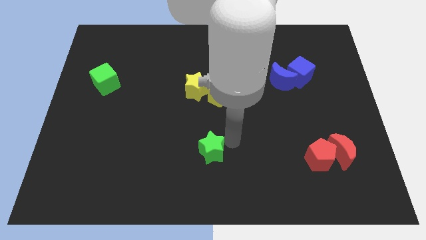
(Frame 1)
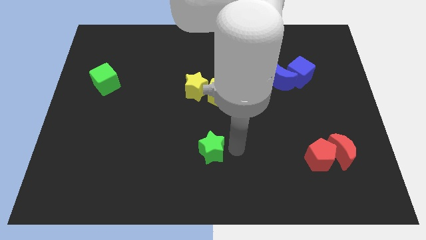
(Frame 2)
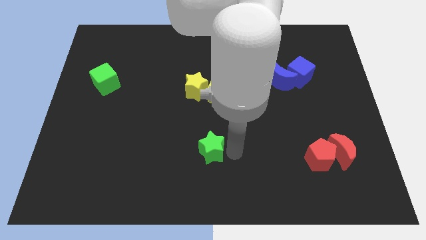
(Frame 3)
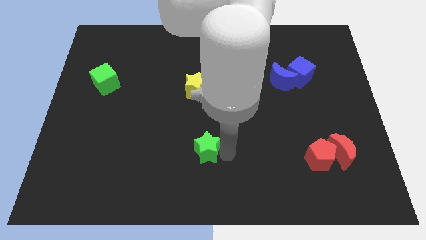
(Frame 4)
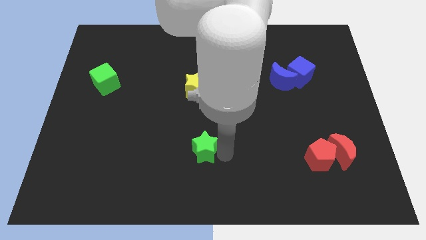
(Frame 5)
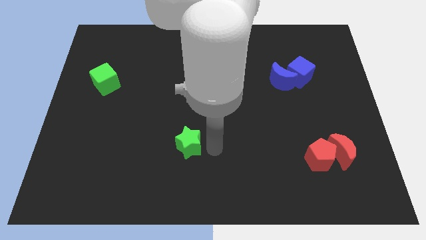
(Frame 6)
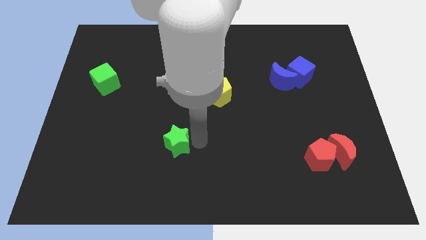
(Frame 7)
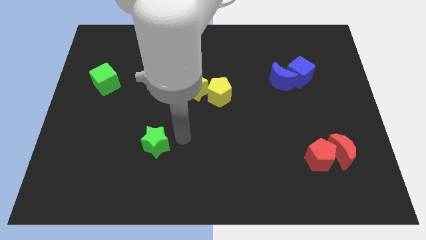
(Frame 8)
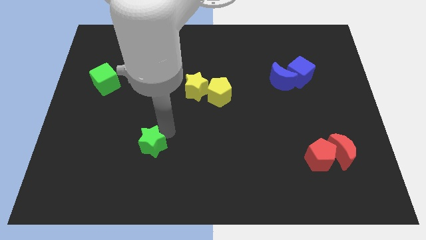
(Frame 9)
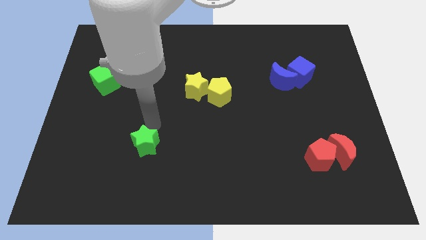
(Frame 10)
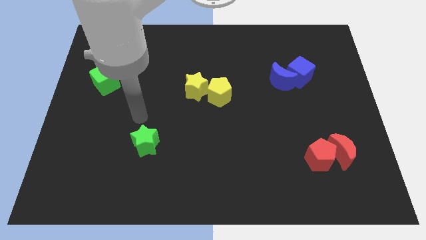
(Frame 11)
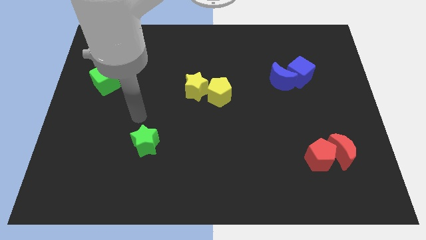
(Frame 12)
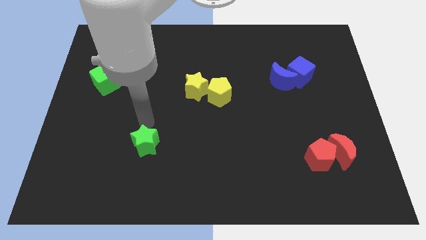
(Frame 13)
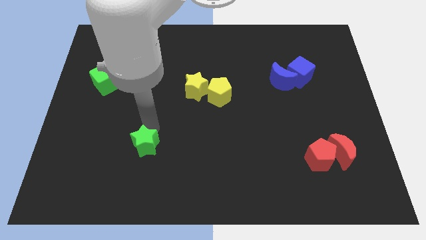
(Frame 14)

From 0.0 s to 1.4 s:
push the green star towards the left of the board

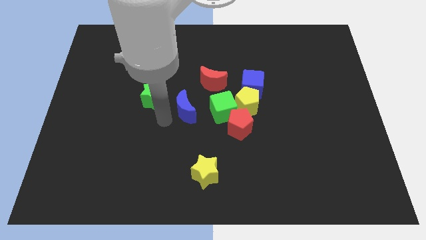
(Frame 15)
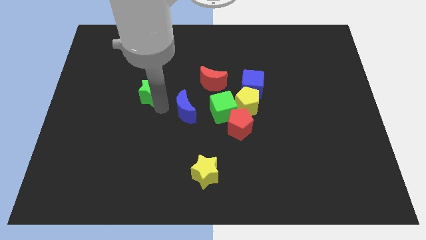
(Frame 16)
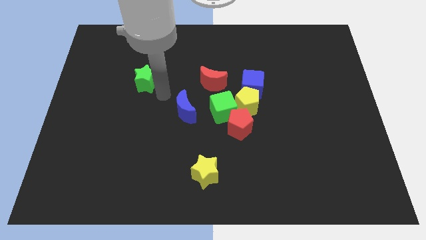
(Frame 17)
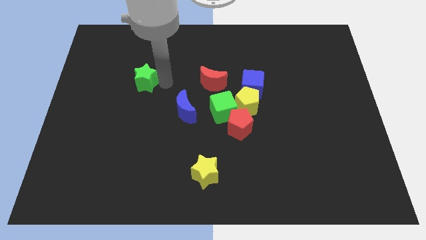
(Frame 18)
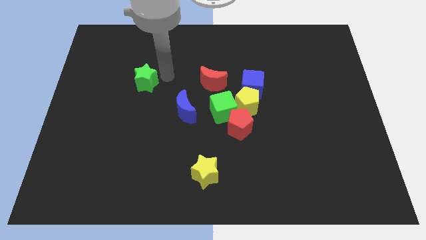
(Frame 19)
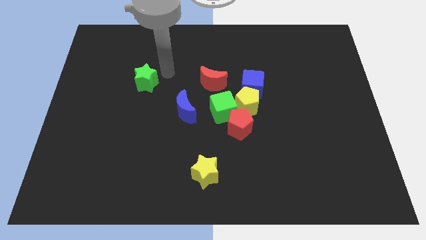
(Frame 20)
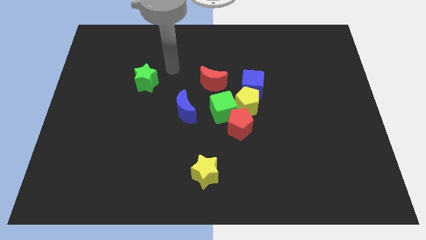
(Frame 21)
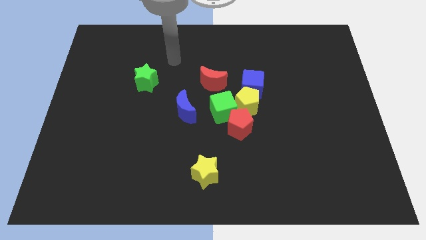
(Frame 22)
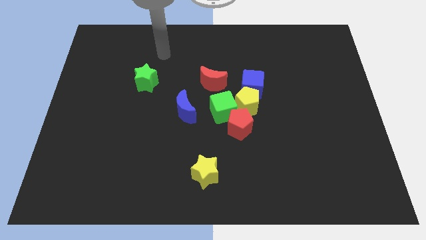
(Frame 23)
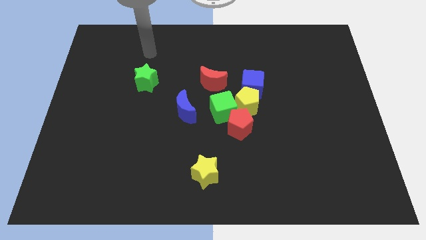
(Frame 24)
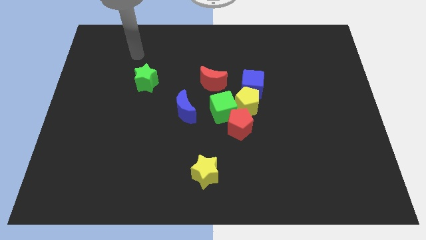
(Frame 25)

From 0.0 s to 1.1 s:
place the green star to the left of the red crescent

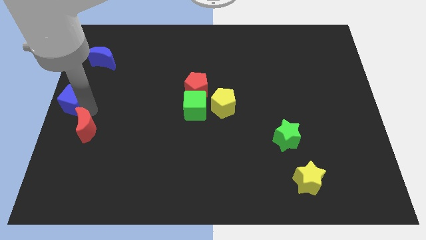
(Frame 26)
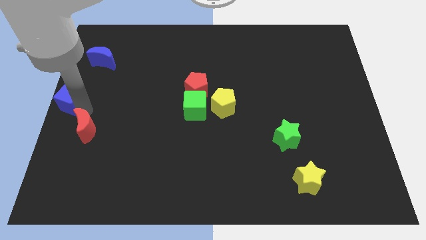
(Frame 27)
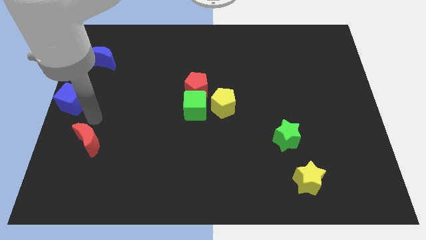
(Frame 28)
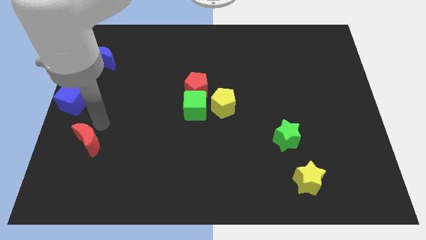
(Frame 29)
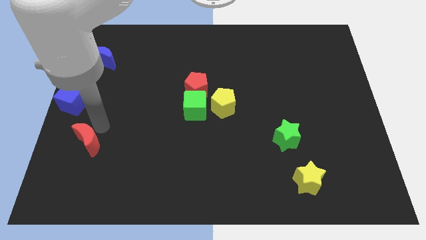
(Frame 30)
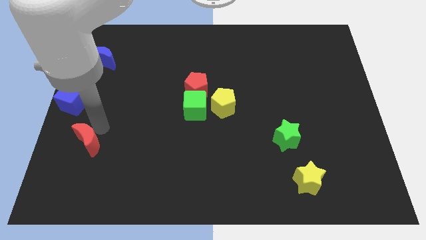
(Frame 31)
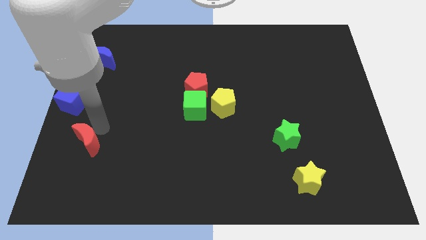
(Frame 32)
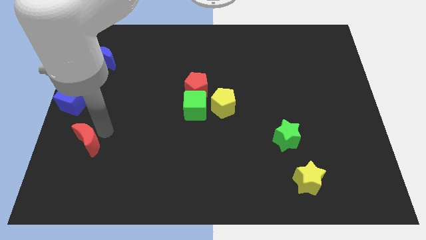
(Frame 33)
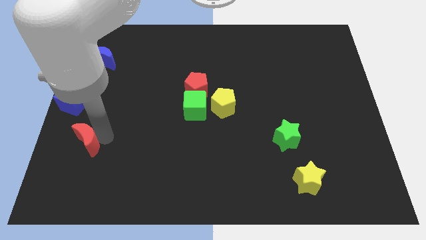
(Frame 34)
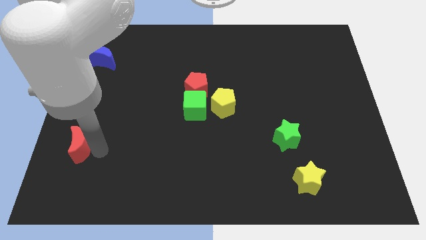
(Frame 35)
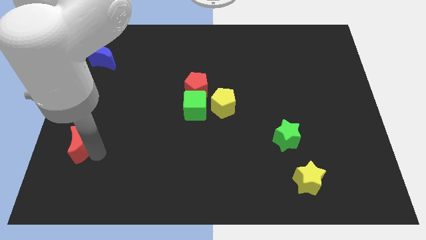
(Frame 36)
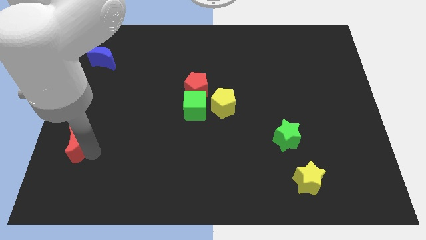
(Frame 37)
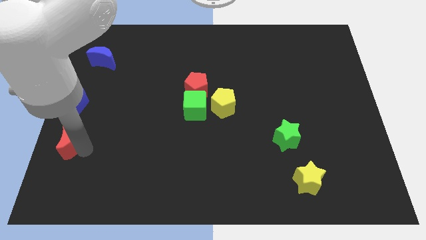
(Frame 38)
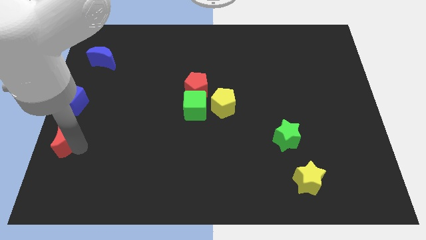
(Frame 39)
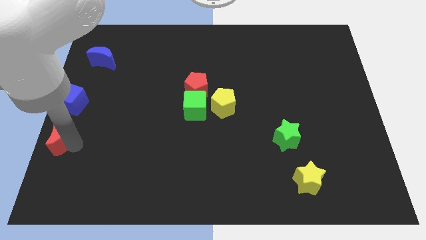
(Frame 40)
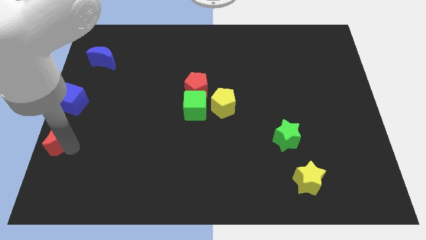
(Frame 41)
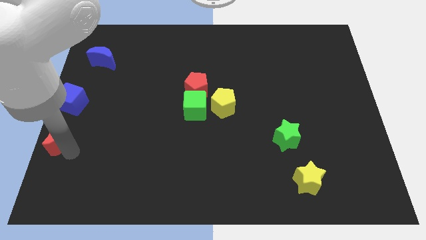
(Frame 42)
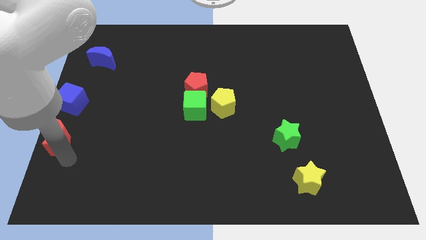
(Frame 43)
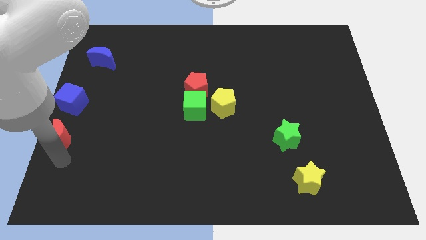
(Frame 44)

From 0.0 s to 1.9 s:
move the red moon below the blue cube

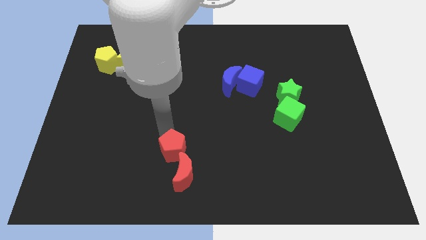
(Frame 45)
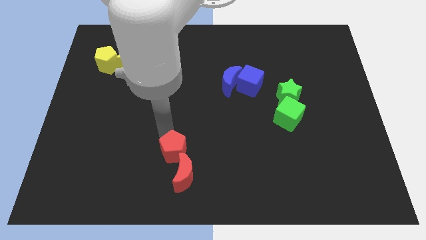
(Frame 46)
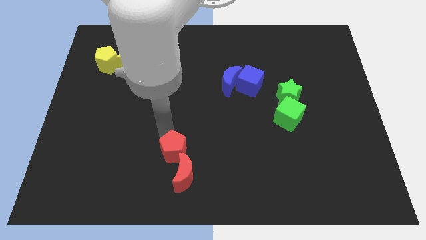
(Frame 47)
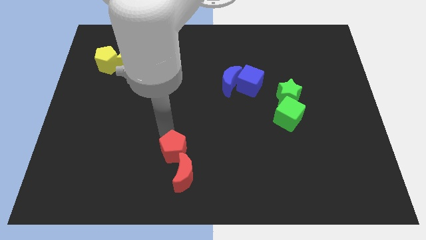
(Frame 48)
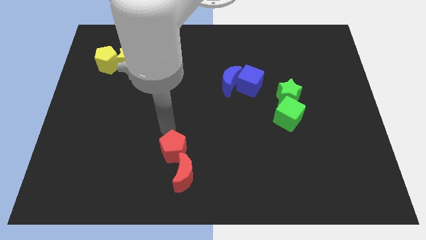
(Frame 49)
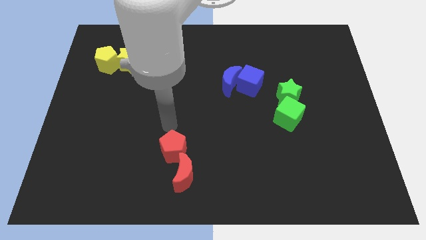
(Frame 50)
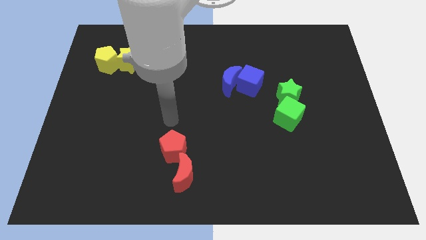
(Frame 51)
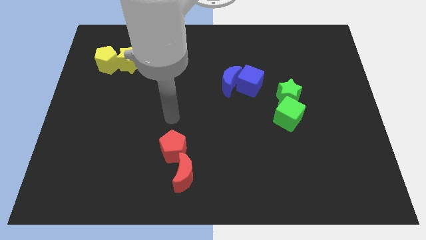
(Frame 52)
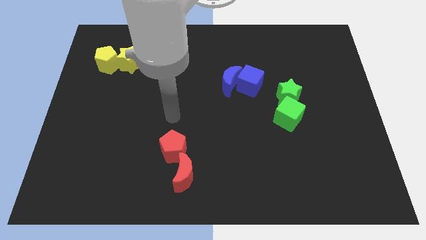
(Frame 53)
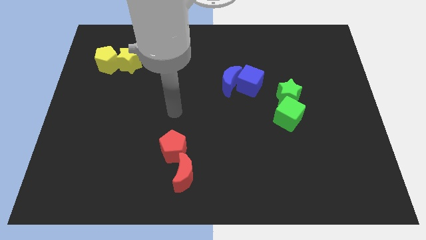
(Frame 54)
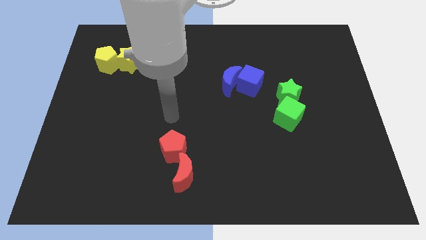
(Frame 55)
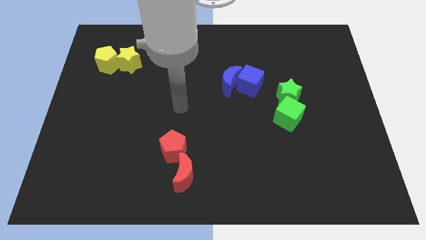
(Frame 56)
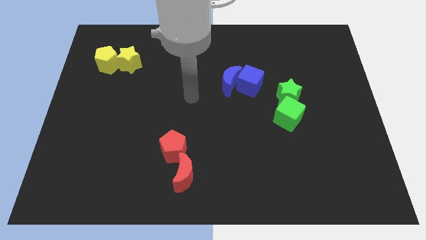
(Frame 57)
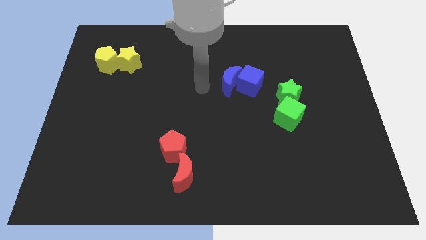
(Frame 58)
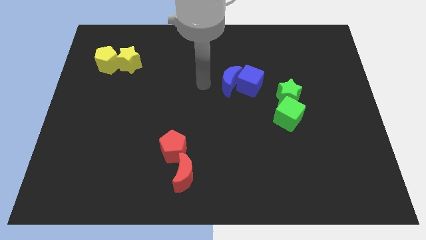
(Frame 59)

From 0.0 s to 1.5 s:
move away the arm from the red pentagon

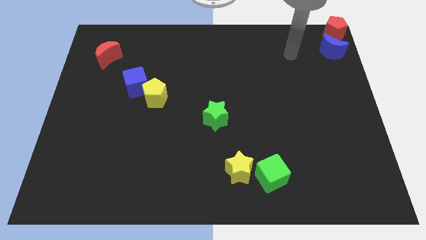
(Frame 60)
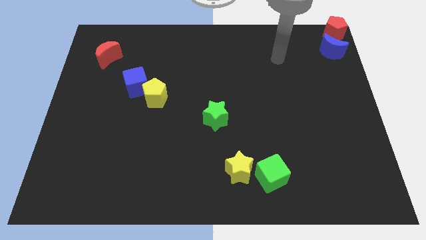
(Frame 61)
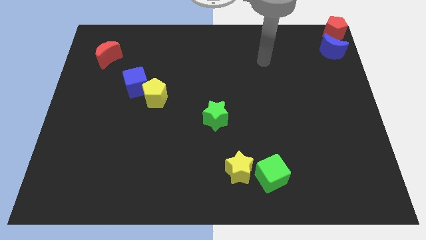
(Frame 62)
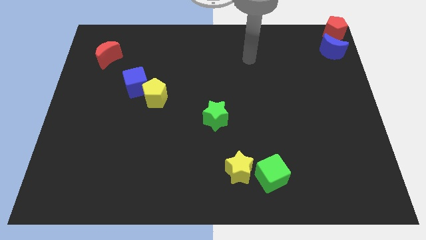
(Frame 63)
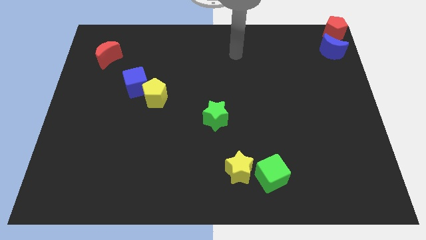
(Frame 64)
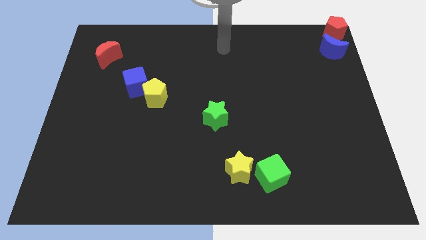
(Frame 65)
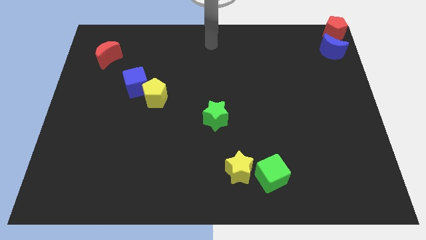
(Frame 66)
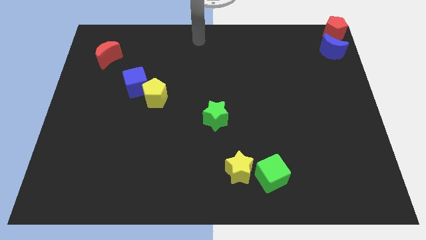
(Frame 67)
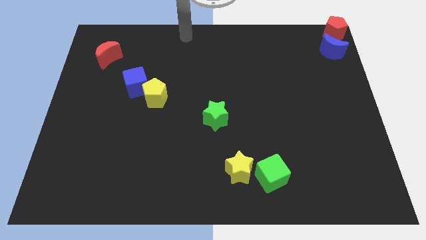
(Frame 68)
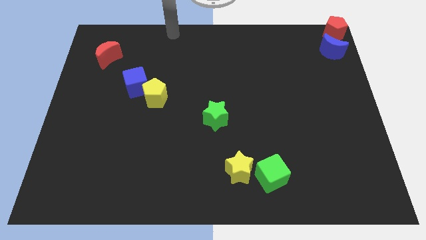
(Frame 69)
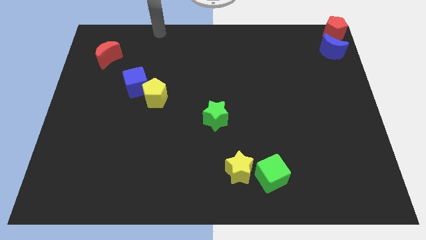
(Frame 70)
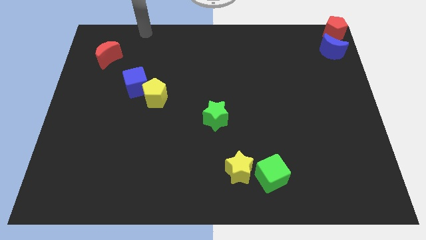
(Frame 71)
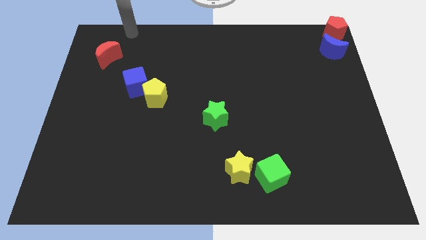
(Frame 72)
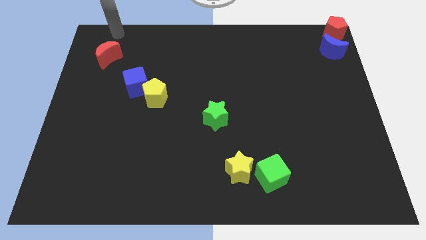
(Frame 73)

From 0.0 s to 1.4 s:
move your arm to the top left of the board

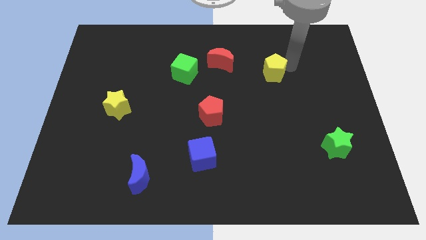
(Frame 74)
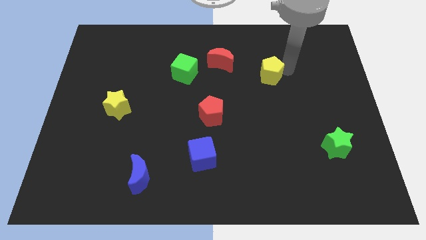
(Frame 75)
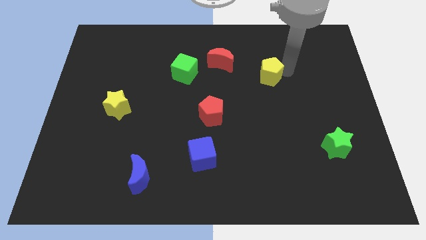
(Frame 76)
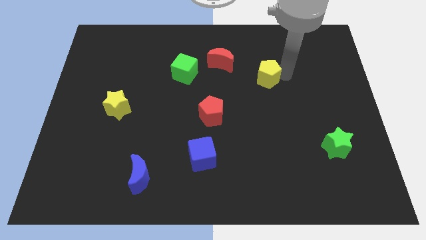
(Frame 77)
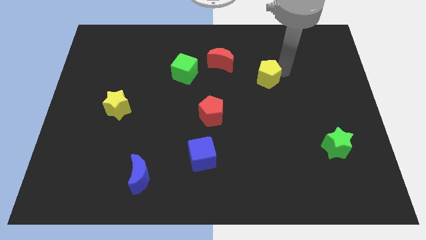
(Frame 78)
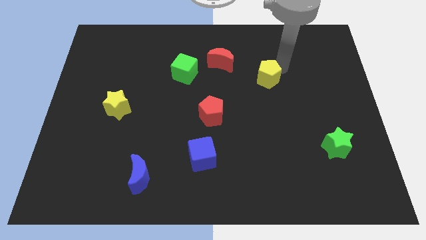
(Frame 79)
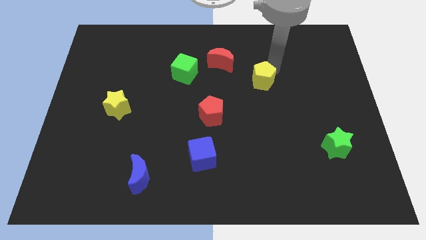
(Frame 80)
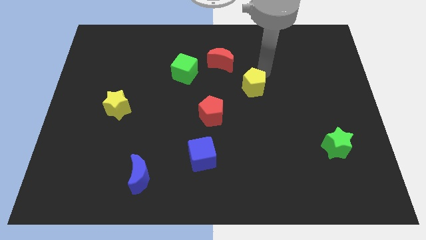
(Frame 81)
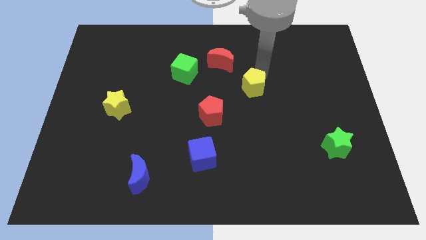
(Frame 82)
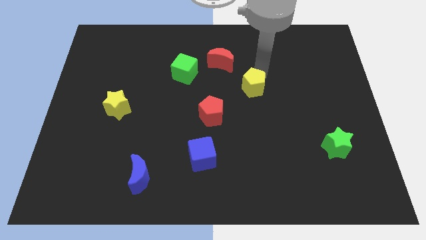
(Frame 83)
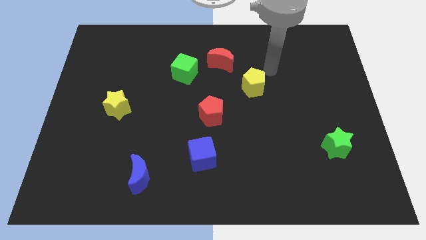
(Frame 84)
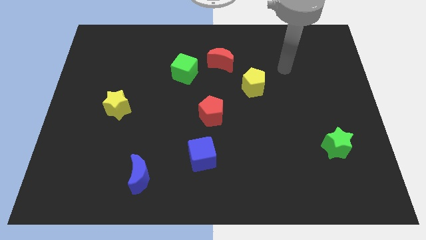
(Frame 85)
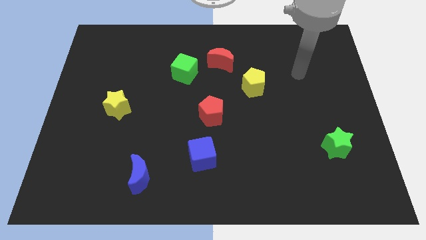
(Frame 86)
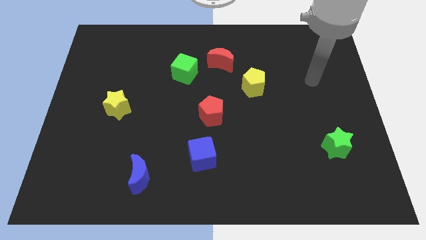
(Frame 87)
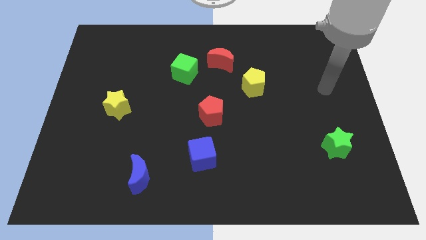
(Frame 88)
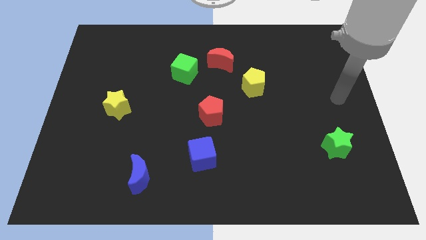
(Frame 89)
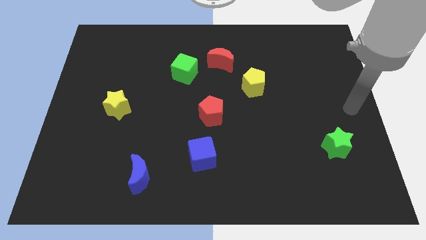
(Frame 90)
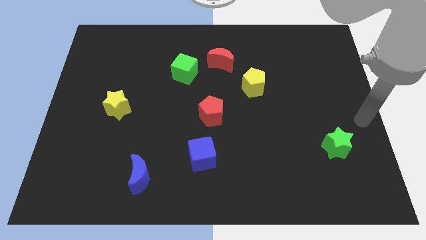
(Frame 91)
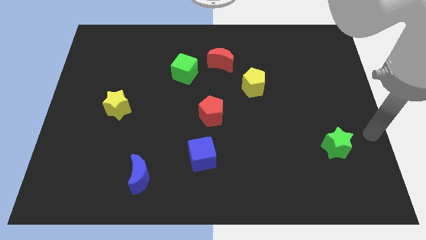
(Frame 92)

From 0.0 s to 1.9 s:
push the yellow pentagon diagonally bottom right of the red crescent
